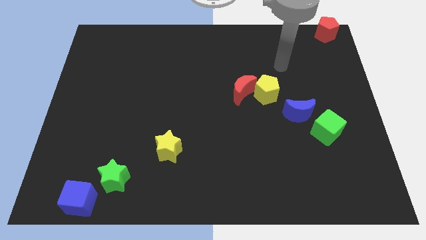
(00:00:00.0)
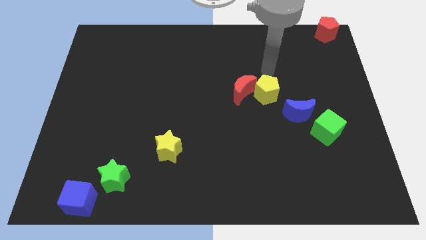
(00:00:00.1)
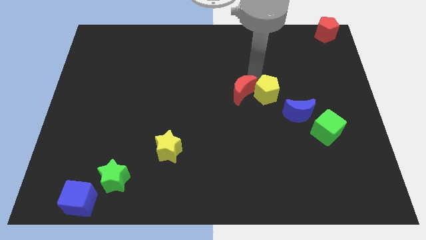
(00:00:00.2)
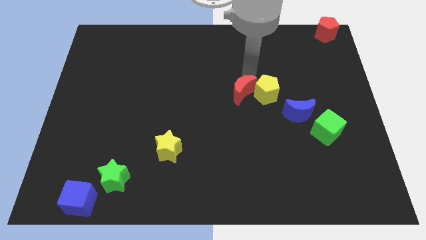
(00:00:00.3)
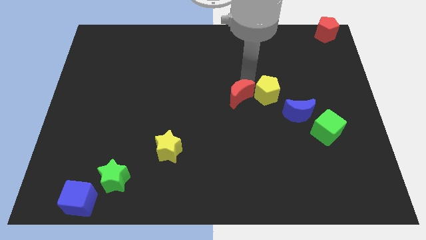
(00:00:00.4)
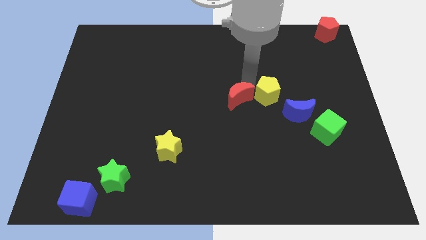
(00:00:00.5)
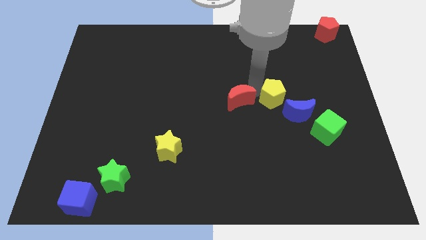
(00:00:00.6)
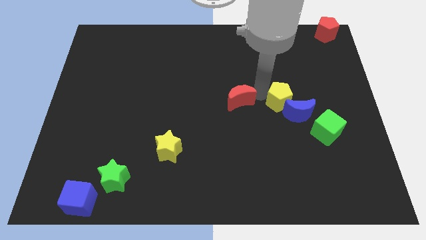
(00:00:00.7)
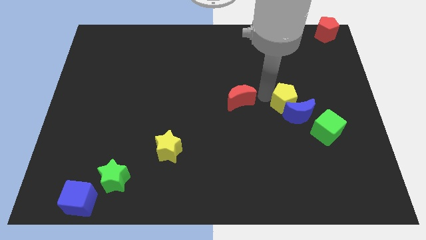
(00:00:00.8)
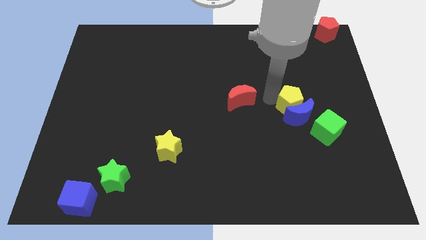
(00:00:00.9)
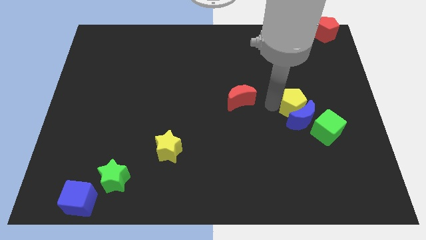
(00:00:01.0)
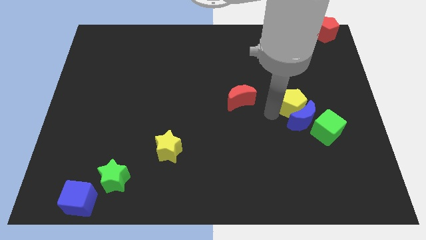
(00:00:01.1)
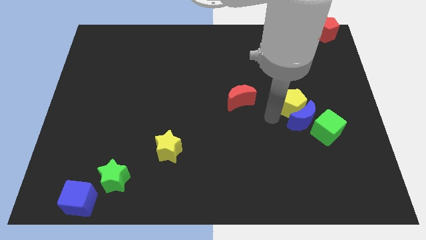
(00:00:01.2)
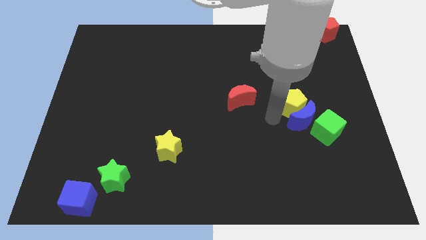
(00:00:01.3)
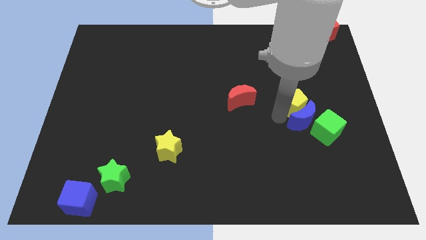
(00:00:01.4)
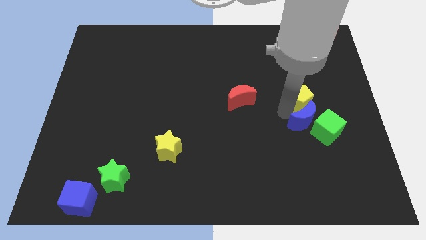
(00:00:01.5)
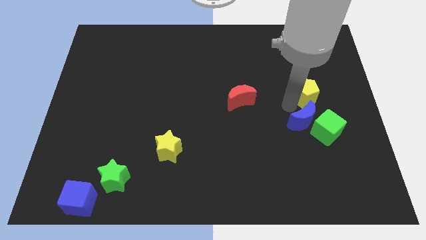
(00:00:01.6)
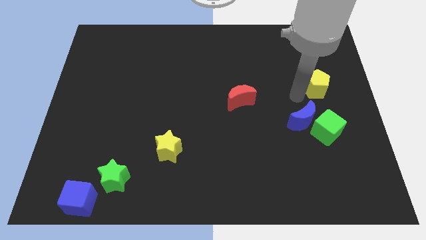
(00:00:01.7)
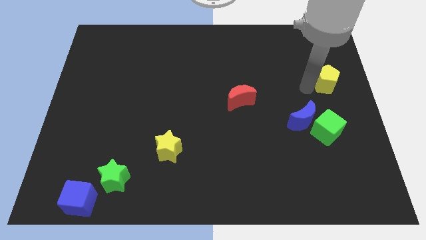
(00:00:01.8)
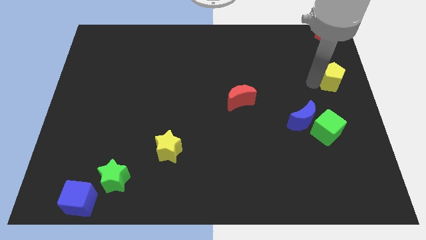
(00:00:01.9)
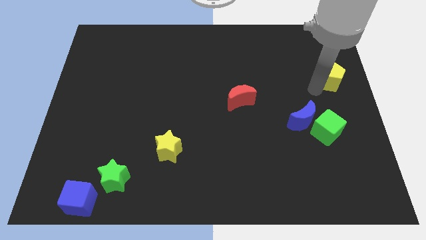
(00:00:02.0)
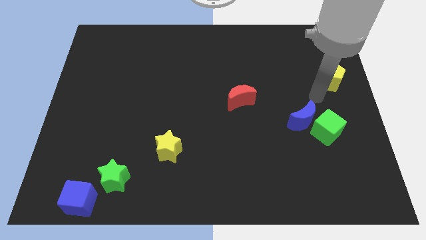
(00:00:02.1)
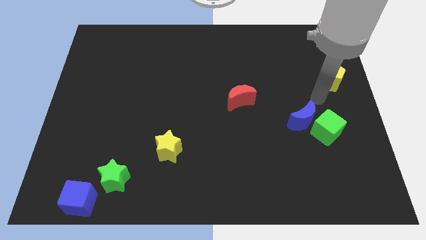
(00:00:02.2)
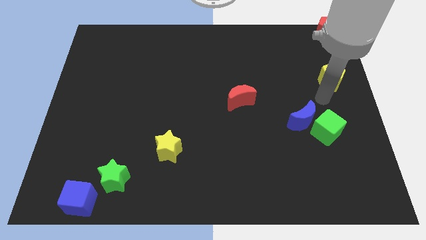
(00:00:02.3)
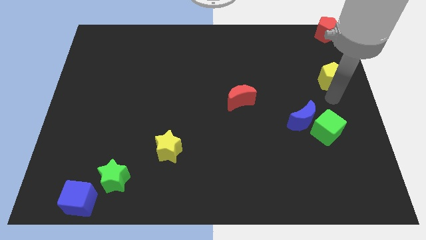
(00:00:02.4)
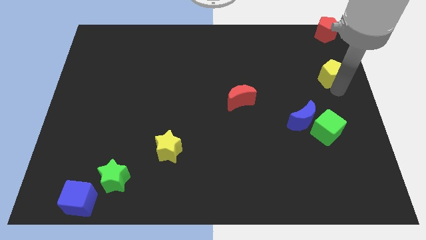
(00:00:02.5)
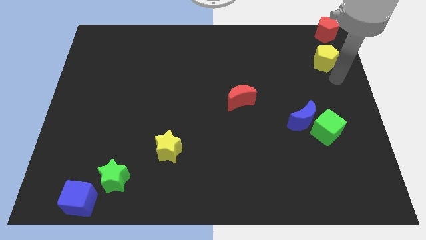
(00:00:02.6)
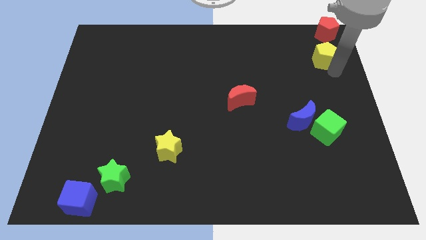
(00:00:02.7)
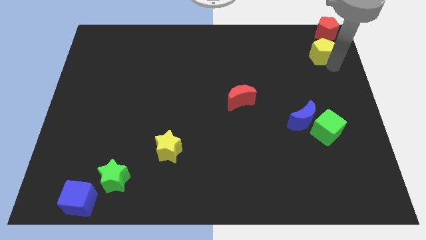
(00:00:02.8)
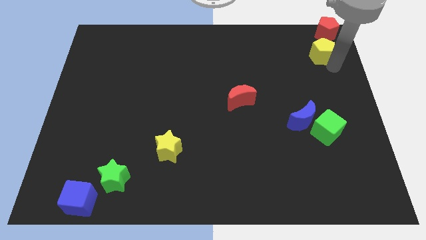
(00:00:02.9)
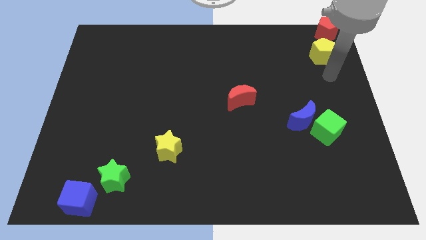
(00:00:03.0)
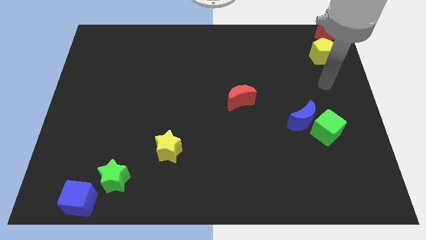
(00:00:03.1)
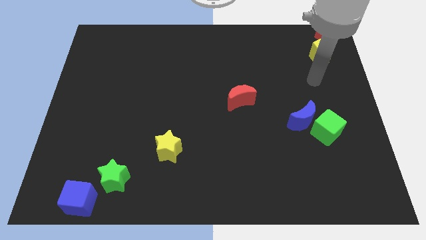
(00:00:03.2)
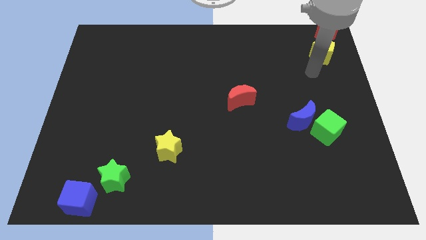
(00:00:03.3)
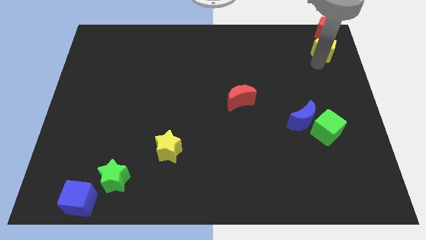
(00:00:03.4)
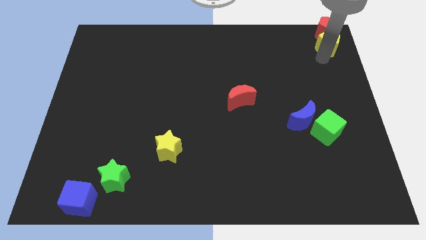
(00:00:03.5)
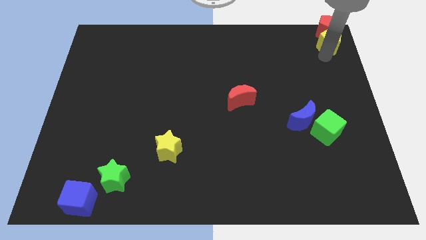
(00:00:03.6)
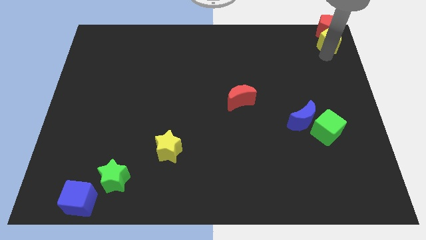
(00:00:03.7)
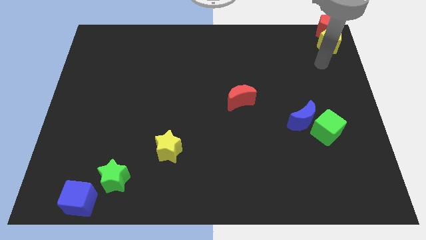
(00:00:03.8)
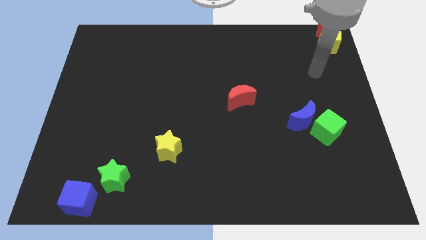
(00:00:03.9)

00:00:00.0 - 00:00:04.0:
drag the yellow pentagon towards the top right corner

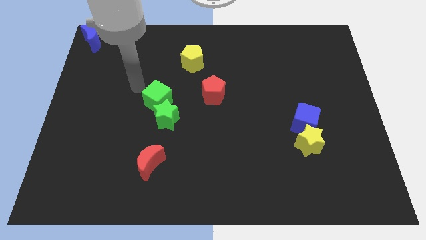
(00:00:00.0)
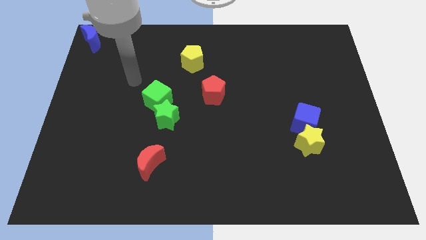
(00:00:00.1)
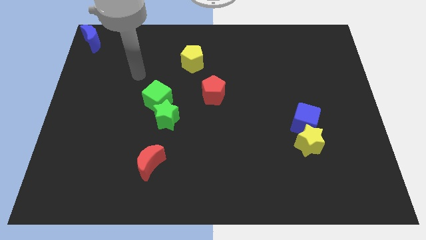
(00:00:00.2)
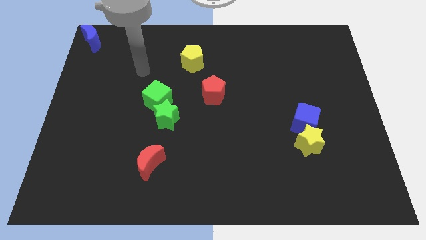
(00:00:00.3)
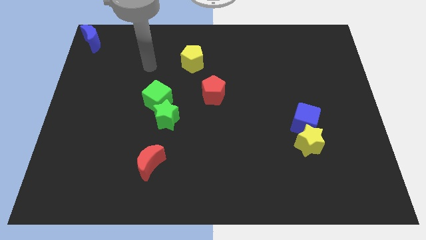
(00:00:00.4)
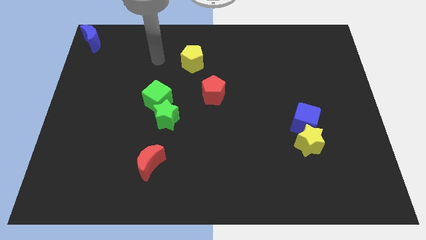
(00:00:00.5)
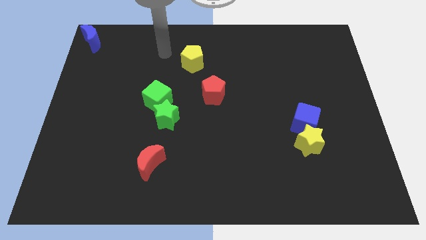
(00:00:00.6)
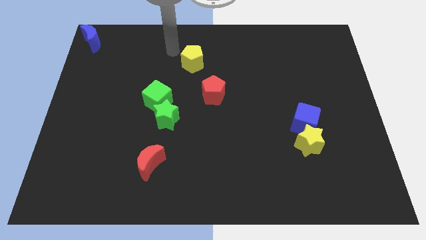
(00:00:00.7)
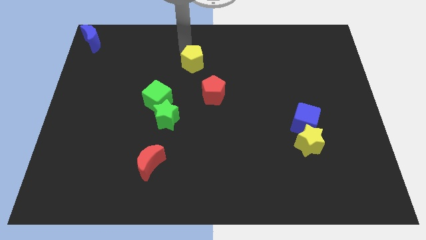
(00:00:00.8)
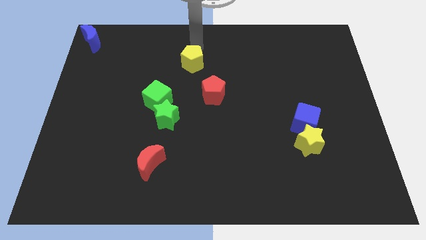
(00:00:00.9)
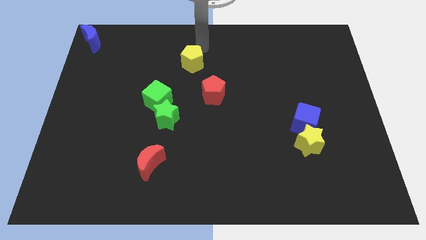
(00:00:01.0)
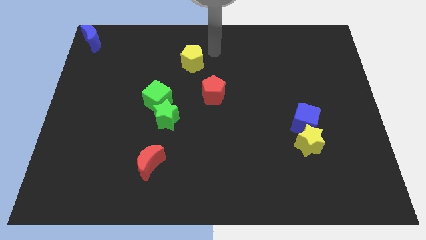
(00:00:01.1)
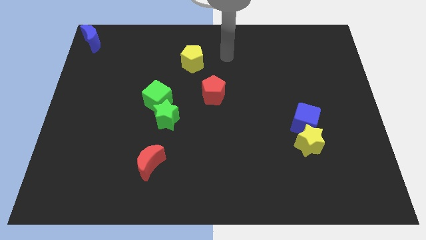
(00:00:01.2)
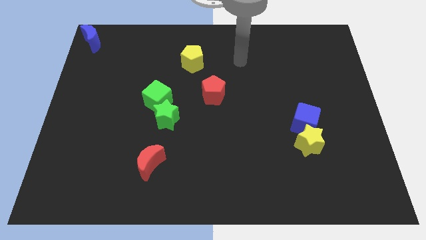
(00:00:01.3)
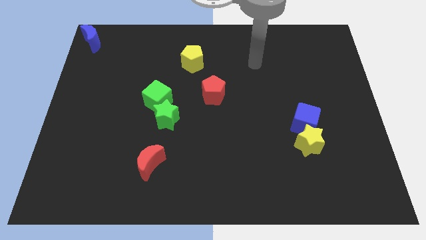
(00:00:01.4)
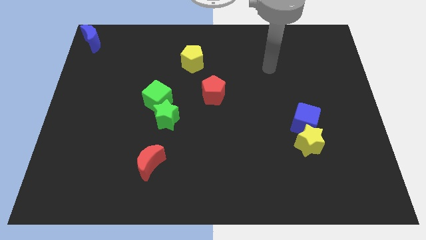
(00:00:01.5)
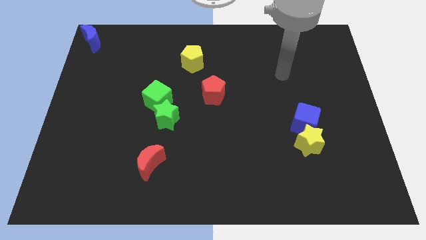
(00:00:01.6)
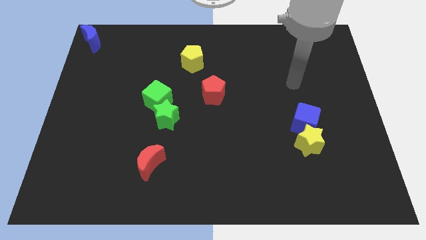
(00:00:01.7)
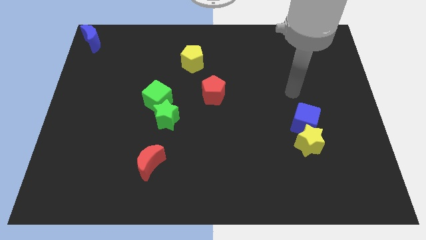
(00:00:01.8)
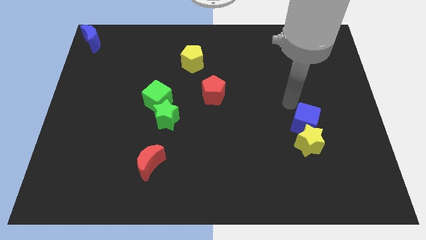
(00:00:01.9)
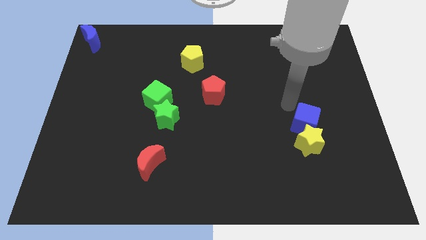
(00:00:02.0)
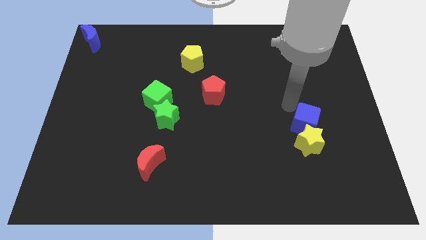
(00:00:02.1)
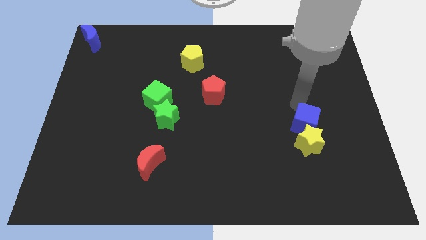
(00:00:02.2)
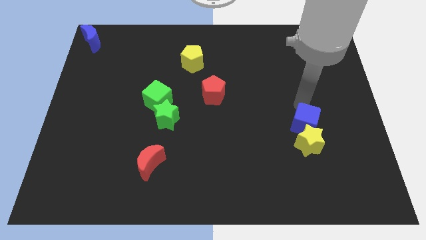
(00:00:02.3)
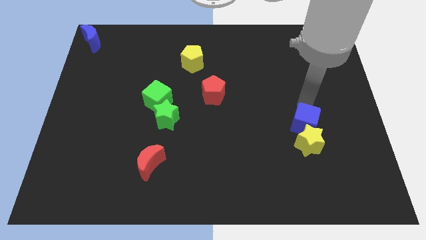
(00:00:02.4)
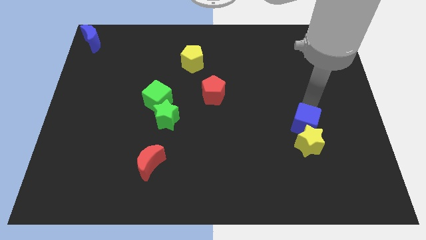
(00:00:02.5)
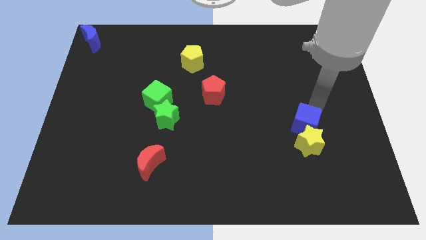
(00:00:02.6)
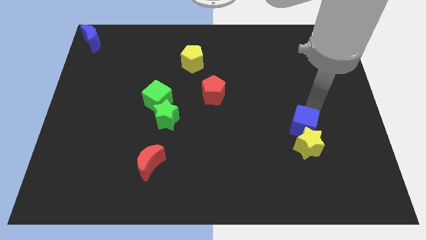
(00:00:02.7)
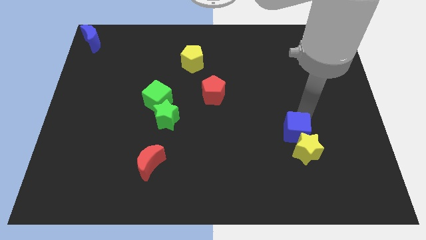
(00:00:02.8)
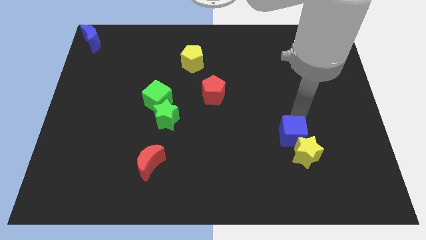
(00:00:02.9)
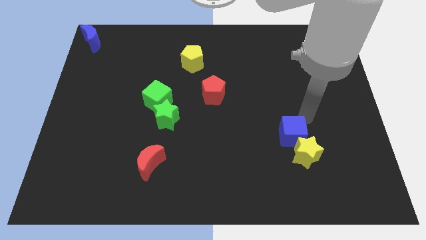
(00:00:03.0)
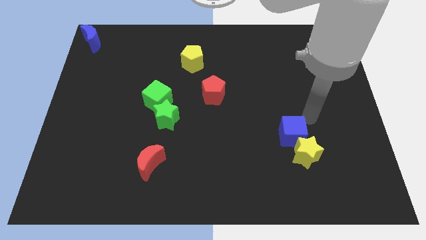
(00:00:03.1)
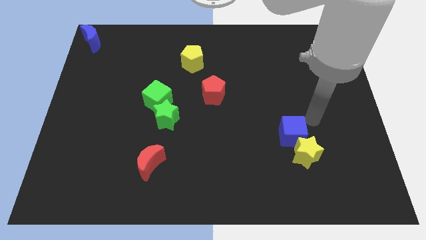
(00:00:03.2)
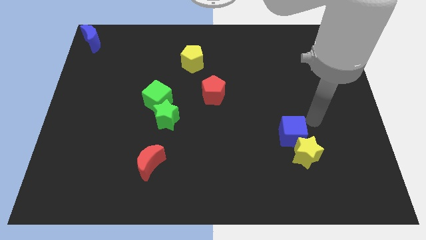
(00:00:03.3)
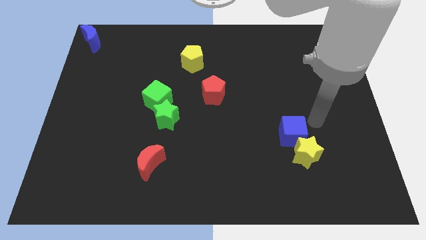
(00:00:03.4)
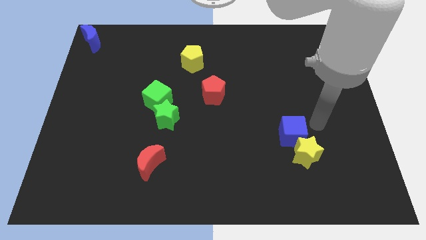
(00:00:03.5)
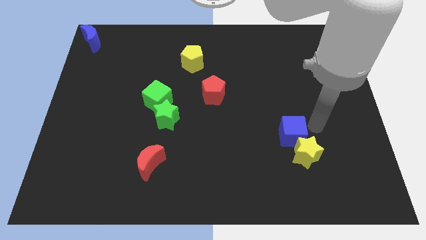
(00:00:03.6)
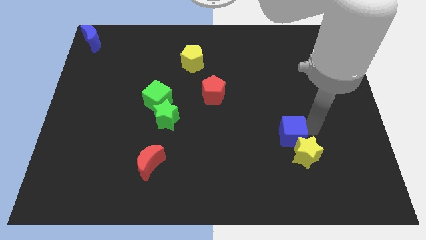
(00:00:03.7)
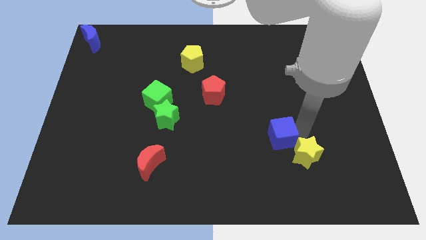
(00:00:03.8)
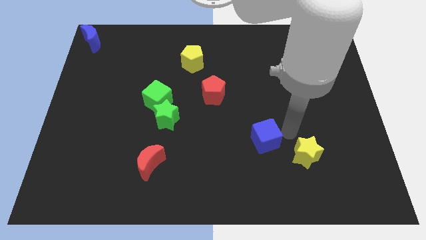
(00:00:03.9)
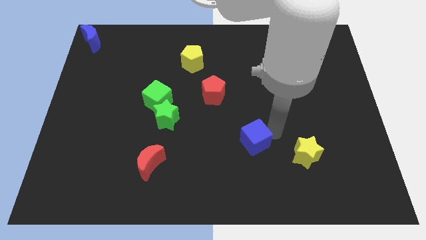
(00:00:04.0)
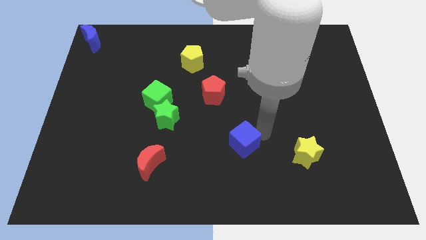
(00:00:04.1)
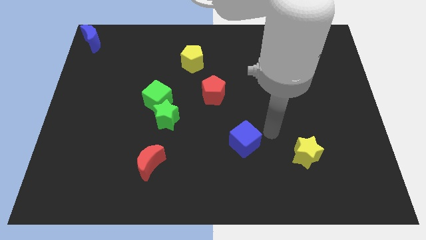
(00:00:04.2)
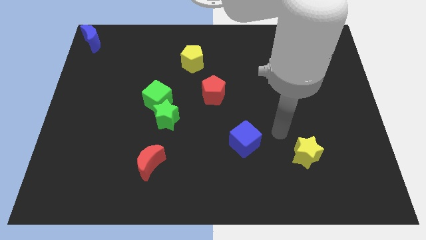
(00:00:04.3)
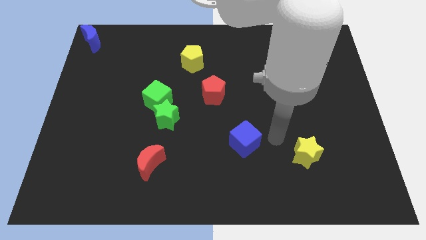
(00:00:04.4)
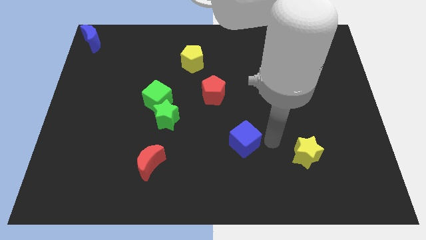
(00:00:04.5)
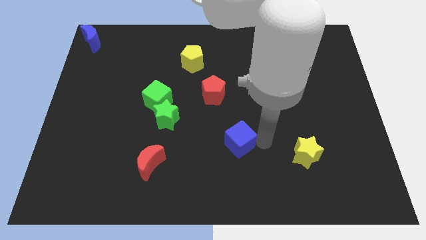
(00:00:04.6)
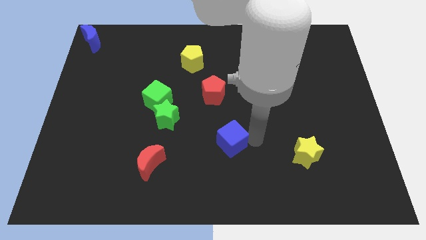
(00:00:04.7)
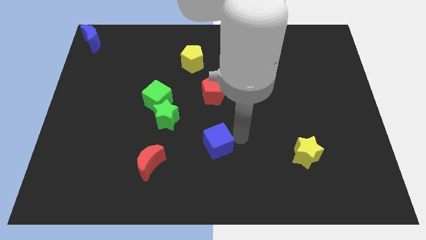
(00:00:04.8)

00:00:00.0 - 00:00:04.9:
place the blue cube in between the red moon and yellow star
